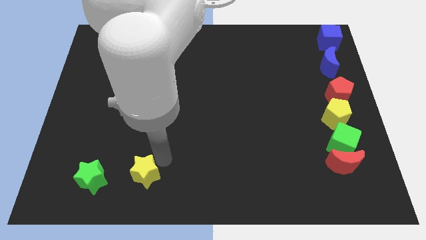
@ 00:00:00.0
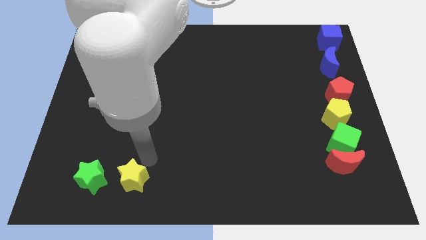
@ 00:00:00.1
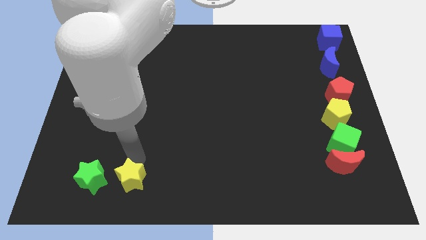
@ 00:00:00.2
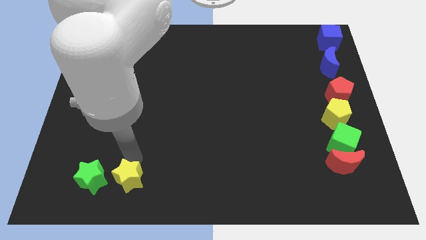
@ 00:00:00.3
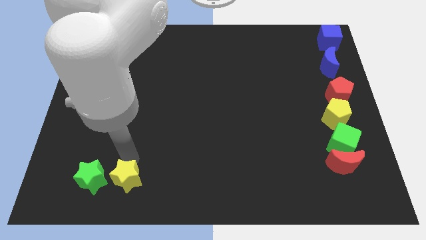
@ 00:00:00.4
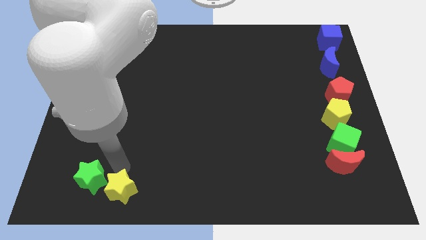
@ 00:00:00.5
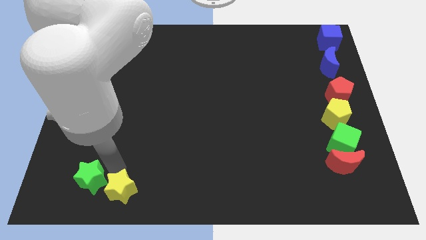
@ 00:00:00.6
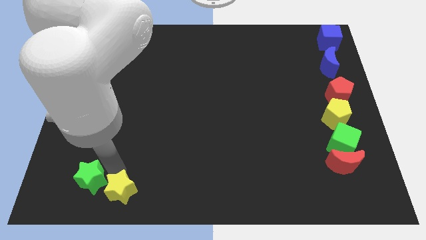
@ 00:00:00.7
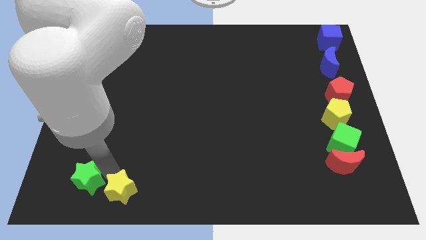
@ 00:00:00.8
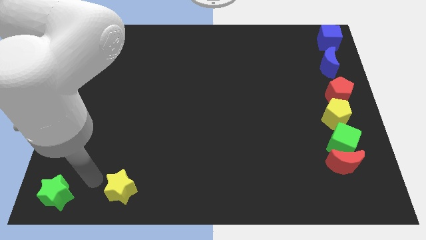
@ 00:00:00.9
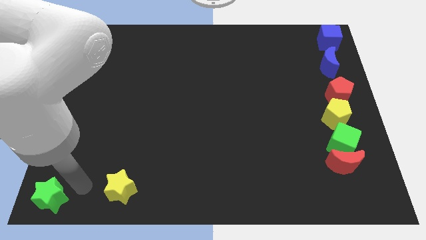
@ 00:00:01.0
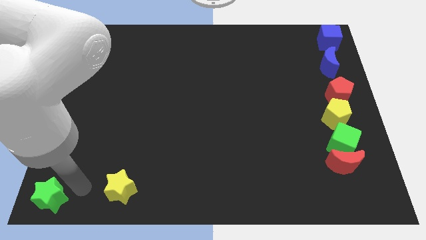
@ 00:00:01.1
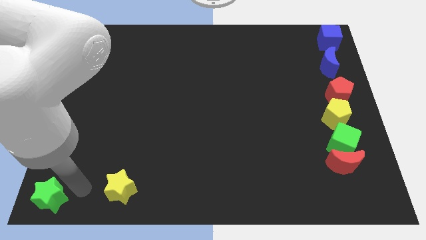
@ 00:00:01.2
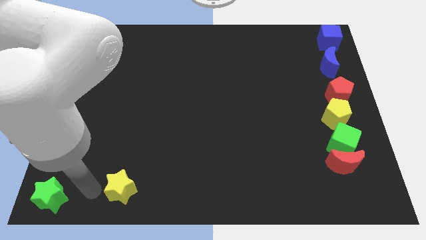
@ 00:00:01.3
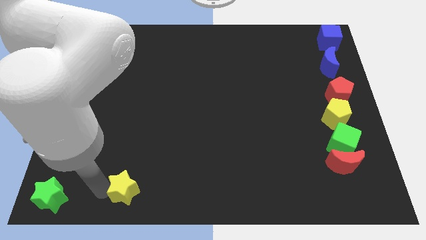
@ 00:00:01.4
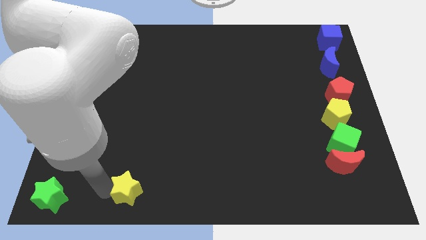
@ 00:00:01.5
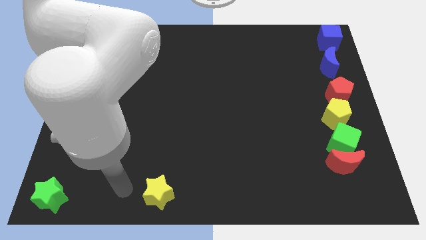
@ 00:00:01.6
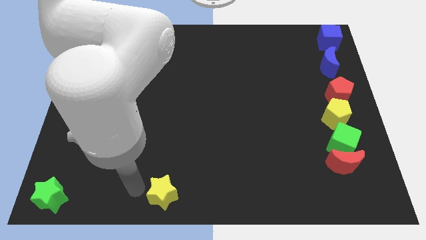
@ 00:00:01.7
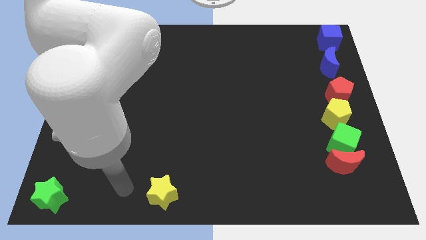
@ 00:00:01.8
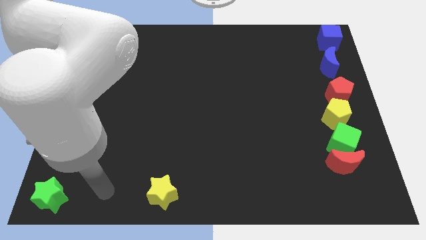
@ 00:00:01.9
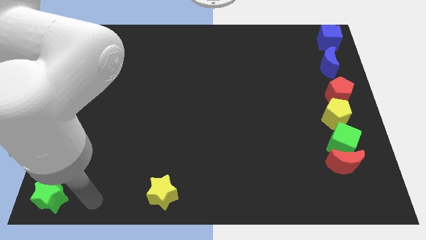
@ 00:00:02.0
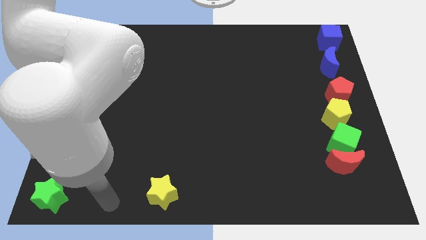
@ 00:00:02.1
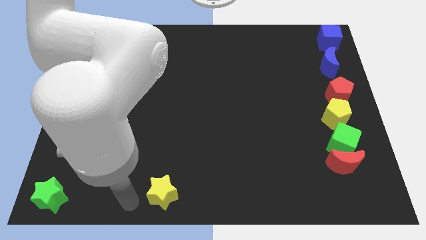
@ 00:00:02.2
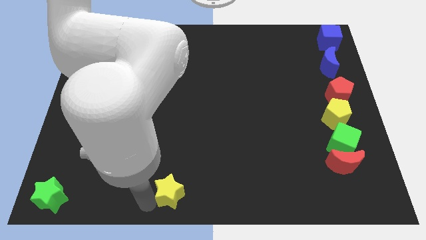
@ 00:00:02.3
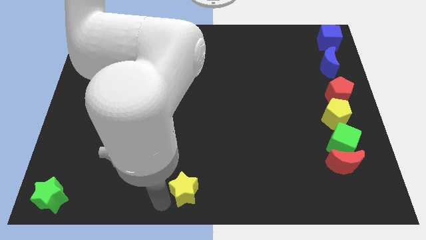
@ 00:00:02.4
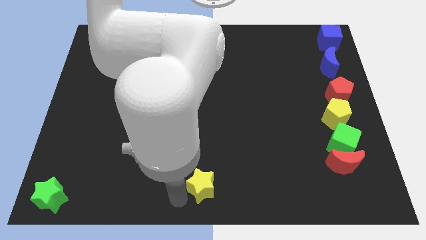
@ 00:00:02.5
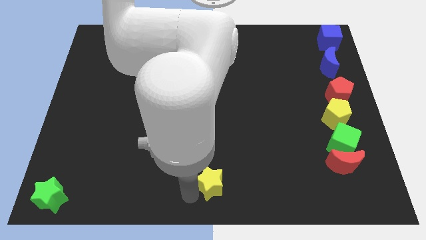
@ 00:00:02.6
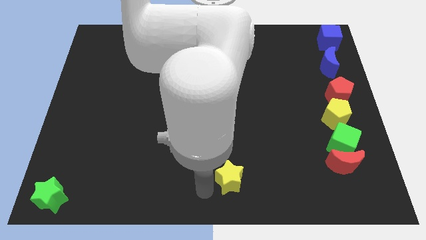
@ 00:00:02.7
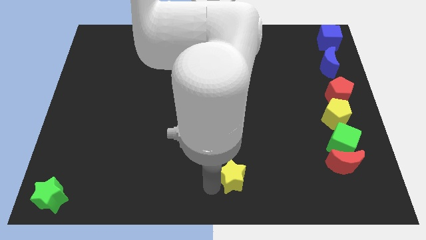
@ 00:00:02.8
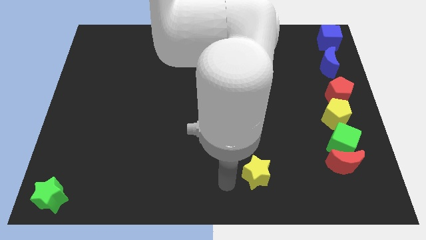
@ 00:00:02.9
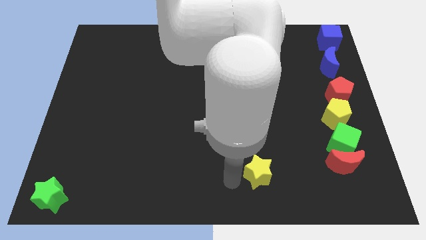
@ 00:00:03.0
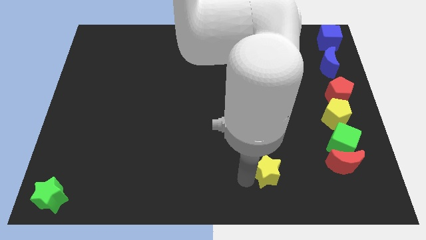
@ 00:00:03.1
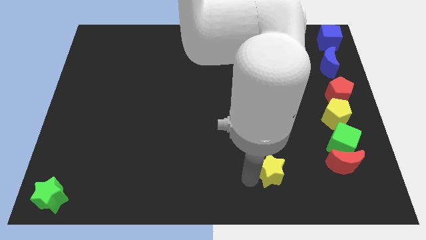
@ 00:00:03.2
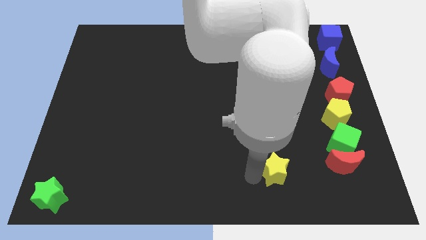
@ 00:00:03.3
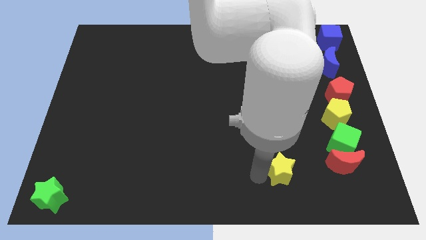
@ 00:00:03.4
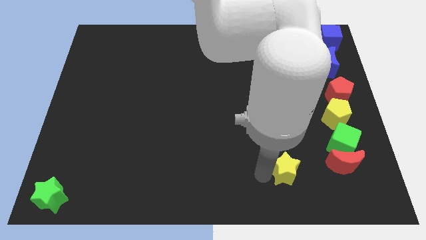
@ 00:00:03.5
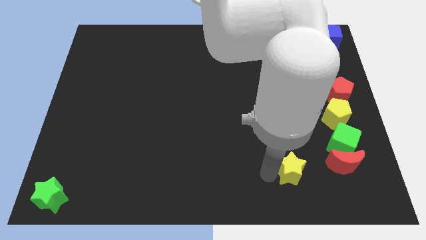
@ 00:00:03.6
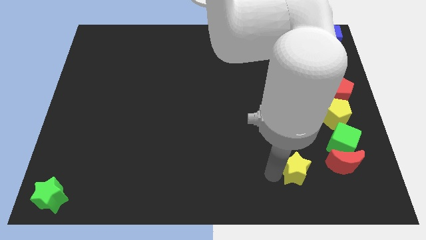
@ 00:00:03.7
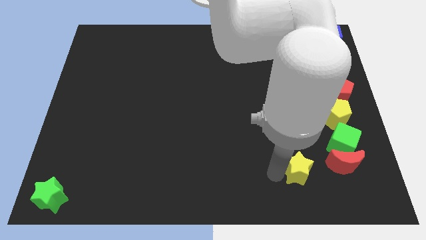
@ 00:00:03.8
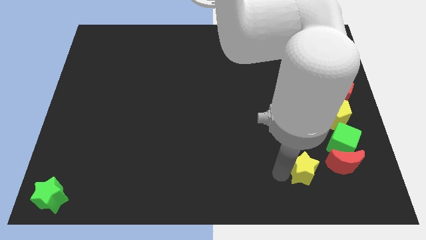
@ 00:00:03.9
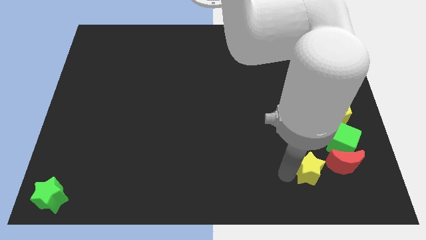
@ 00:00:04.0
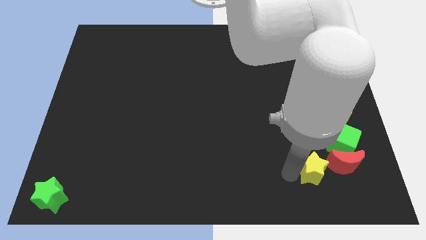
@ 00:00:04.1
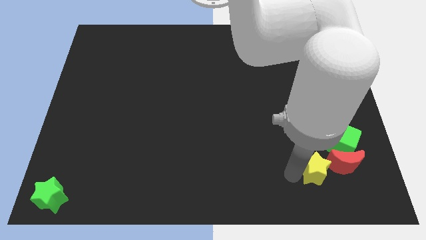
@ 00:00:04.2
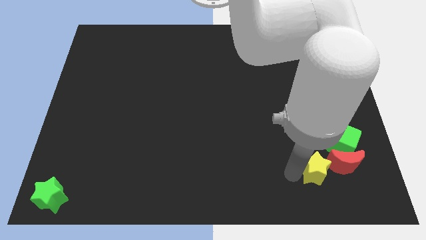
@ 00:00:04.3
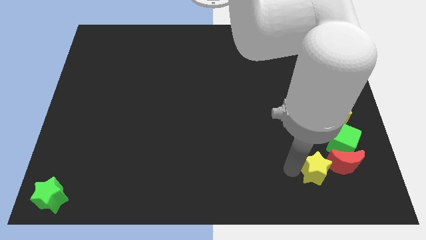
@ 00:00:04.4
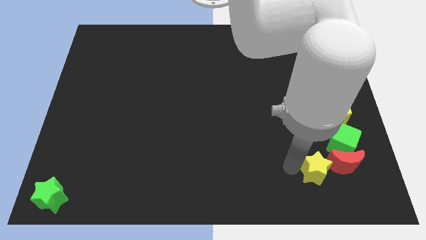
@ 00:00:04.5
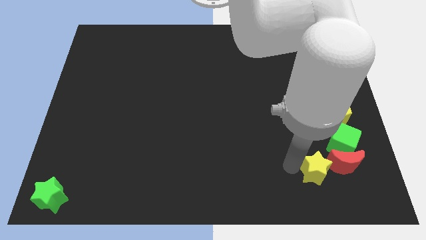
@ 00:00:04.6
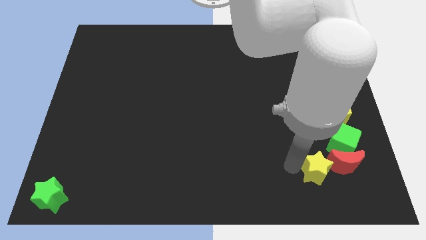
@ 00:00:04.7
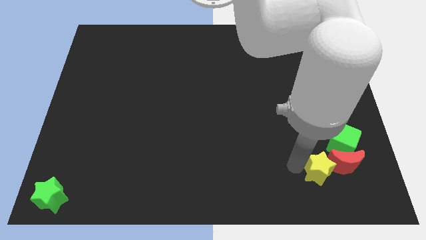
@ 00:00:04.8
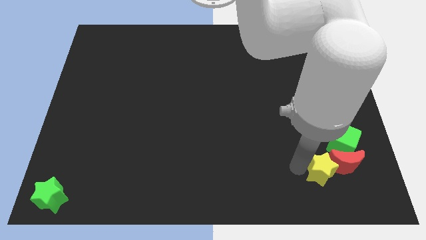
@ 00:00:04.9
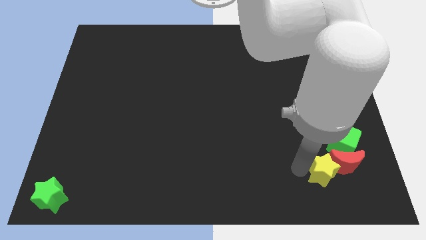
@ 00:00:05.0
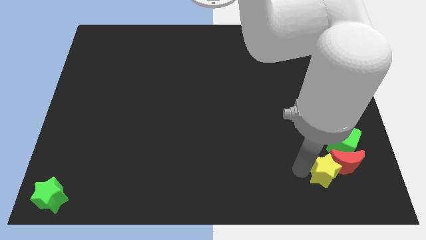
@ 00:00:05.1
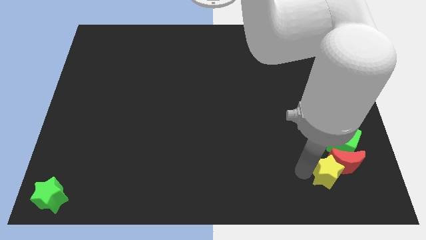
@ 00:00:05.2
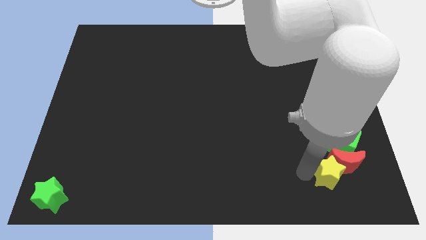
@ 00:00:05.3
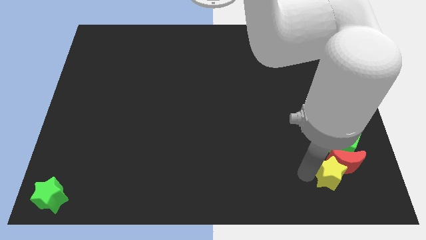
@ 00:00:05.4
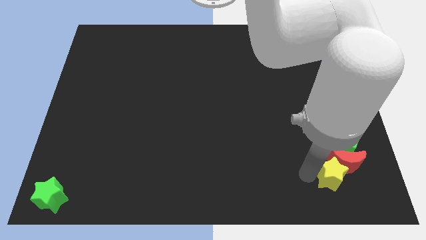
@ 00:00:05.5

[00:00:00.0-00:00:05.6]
move the yellow star towards the right side

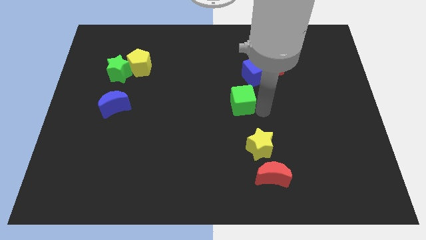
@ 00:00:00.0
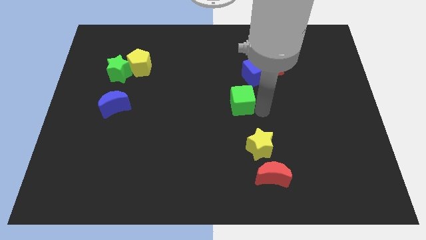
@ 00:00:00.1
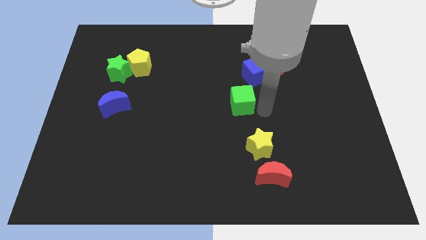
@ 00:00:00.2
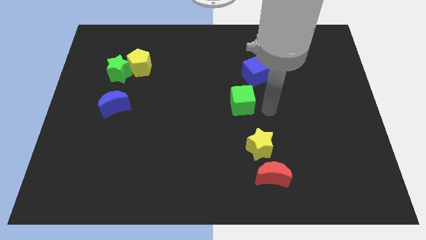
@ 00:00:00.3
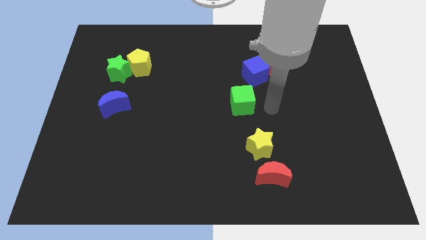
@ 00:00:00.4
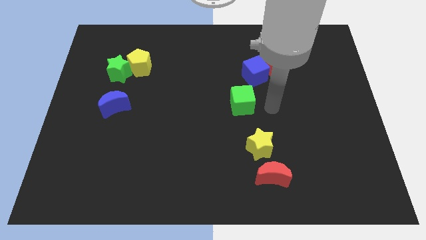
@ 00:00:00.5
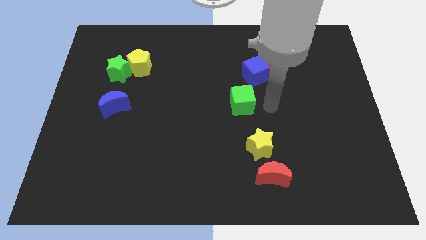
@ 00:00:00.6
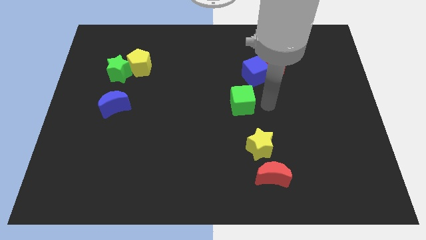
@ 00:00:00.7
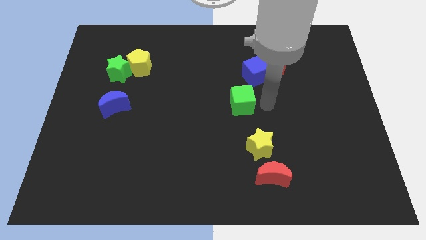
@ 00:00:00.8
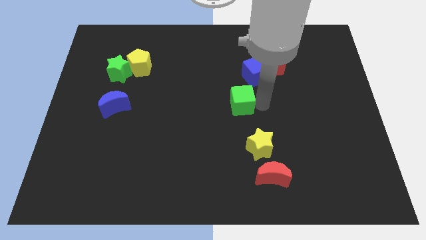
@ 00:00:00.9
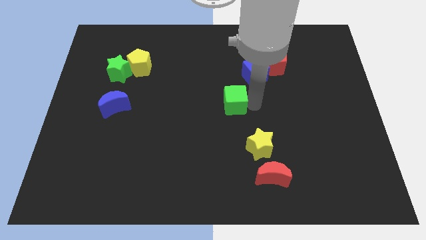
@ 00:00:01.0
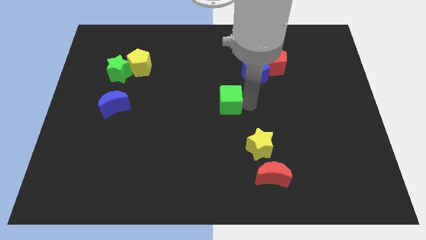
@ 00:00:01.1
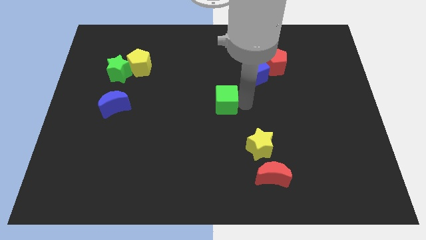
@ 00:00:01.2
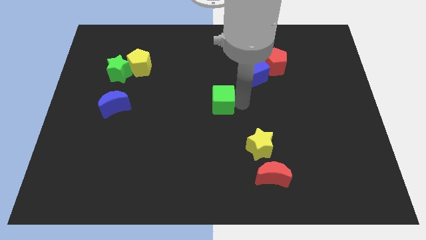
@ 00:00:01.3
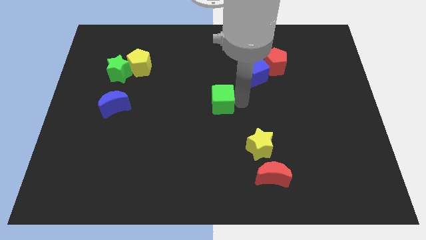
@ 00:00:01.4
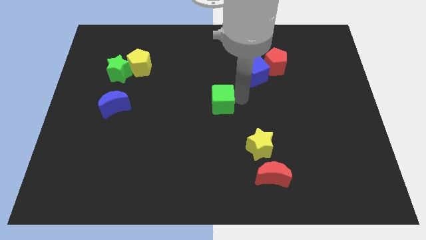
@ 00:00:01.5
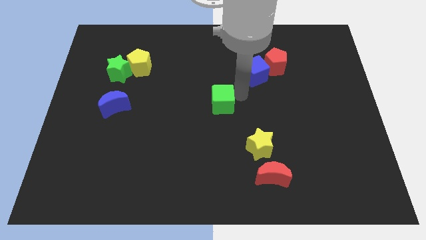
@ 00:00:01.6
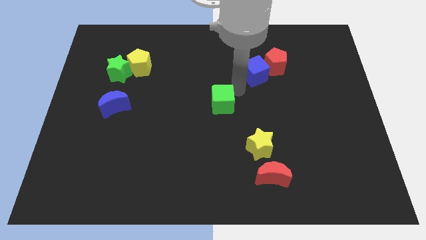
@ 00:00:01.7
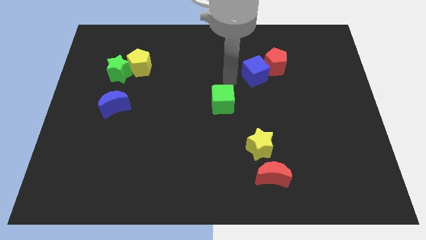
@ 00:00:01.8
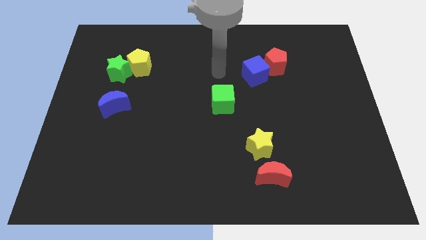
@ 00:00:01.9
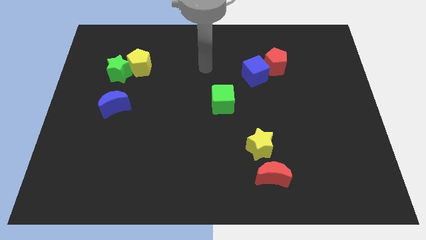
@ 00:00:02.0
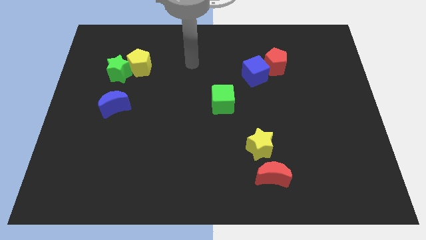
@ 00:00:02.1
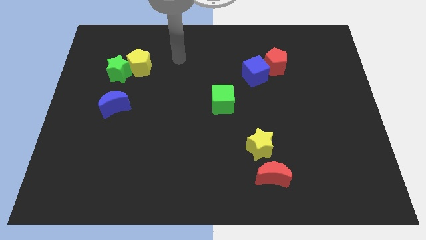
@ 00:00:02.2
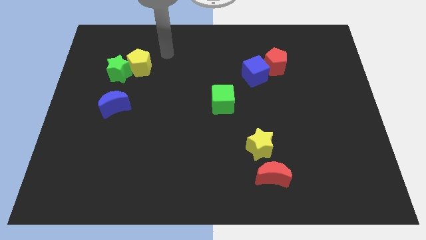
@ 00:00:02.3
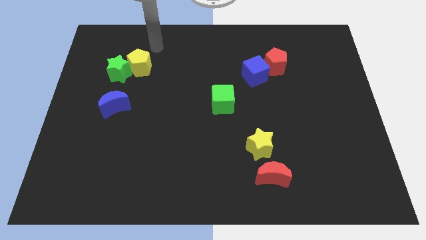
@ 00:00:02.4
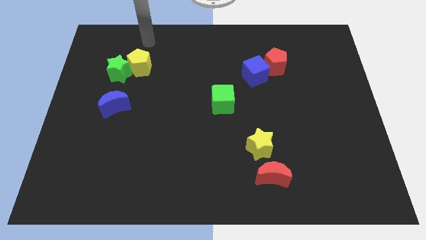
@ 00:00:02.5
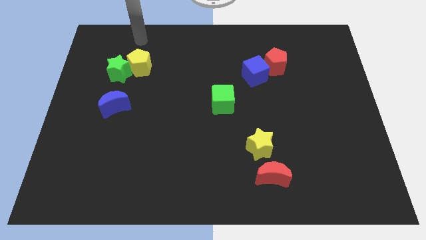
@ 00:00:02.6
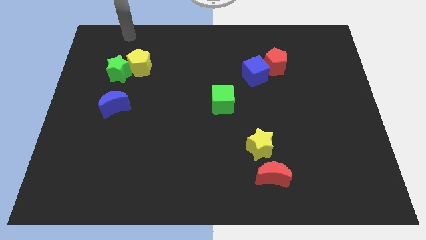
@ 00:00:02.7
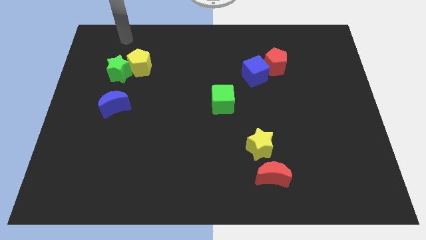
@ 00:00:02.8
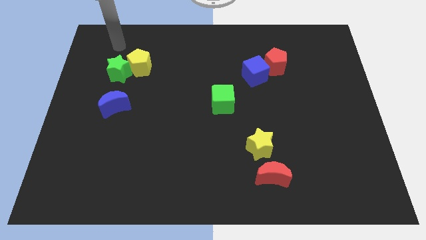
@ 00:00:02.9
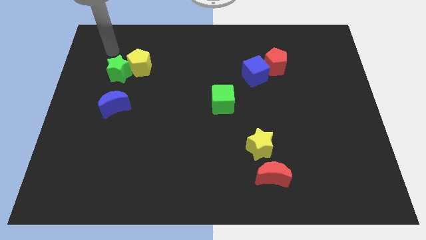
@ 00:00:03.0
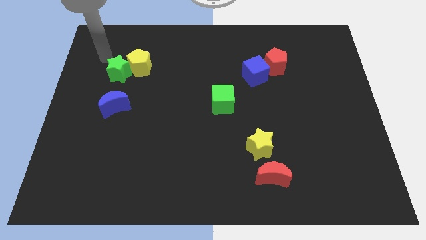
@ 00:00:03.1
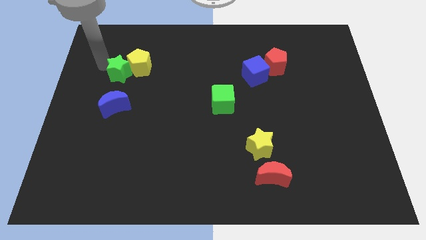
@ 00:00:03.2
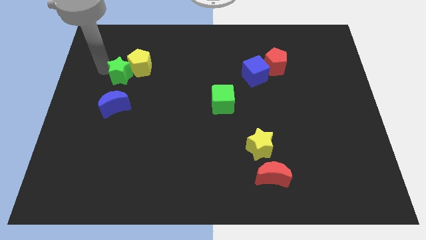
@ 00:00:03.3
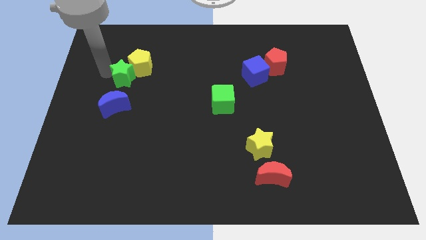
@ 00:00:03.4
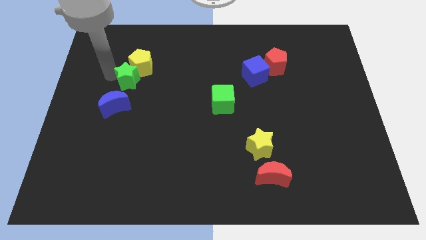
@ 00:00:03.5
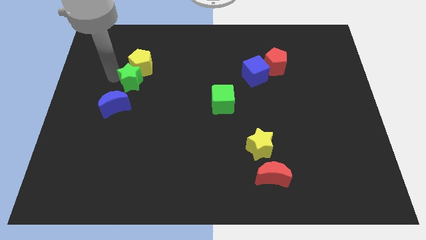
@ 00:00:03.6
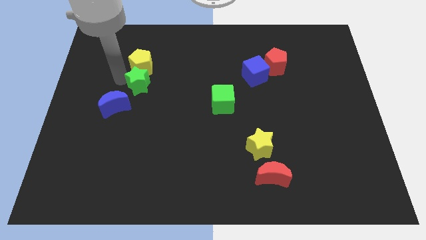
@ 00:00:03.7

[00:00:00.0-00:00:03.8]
push the green cube away from the vertical line
